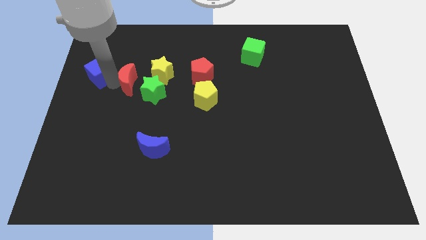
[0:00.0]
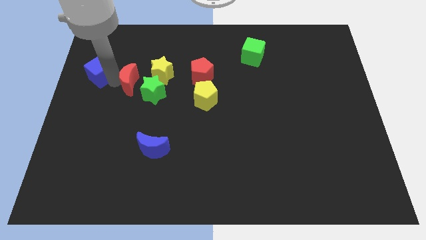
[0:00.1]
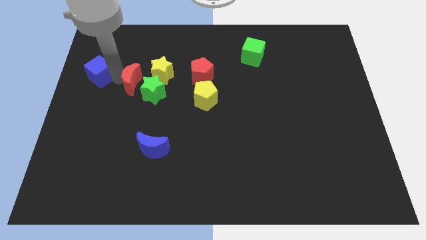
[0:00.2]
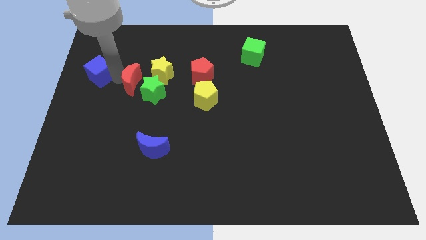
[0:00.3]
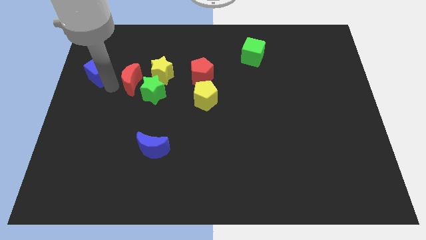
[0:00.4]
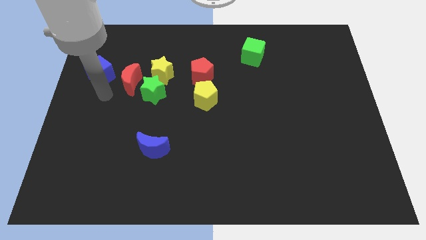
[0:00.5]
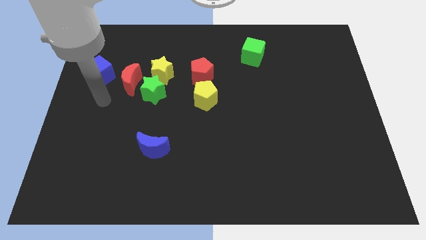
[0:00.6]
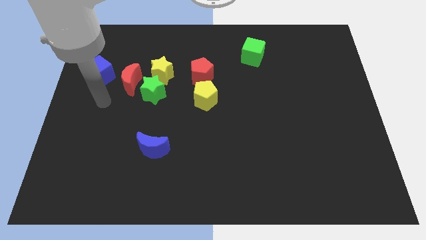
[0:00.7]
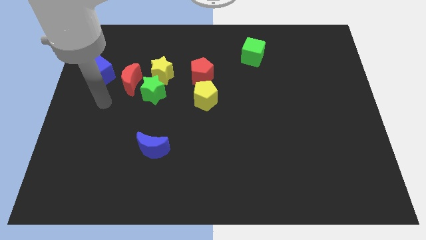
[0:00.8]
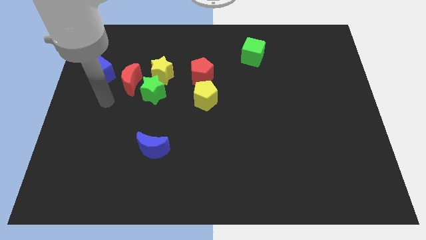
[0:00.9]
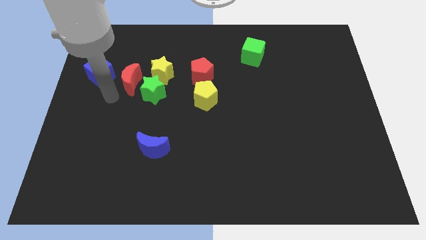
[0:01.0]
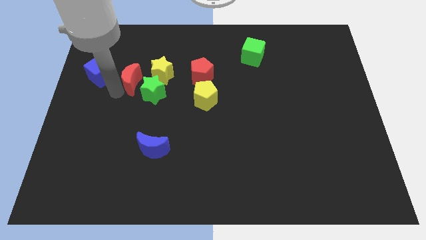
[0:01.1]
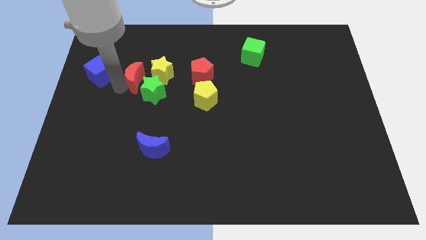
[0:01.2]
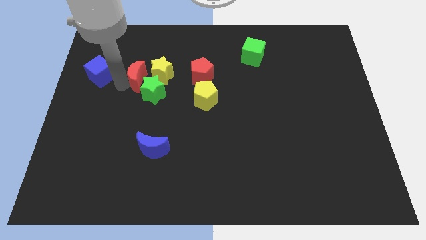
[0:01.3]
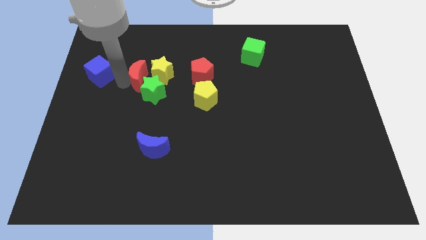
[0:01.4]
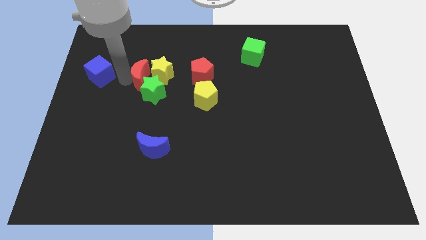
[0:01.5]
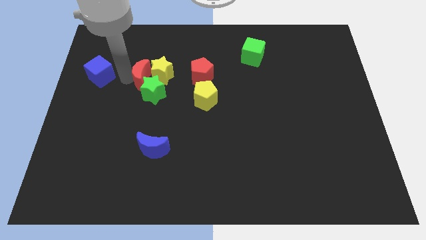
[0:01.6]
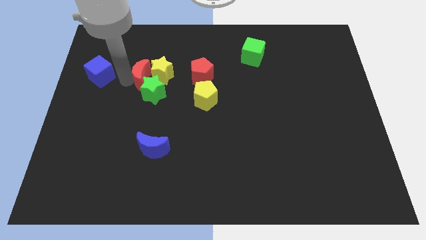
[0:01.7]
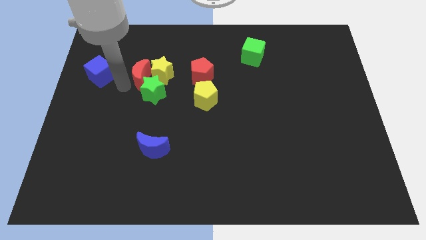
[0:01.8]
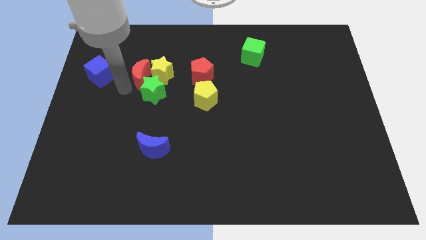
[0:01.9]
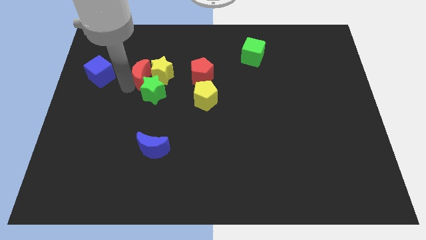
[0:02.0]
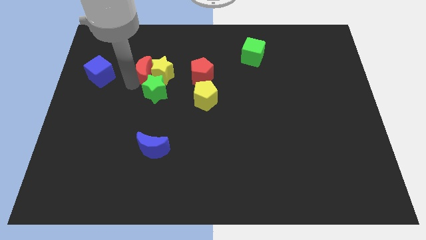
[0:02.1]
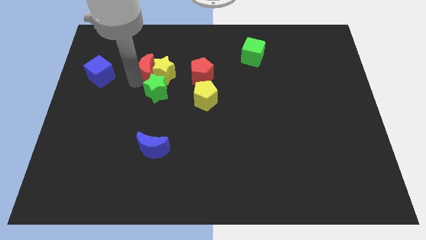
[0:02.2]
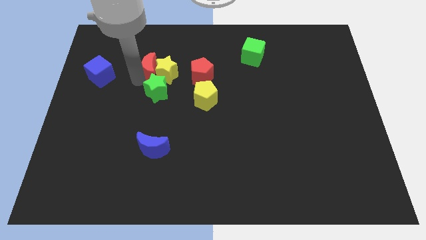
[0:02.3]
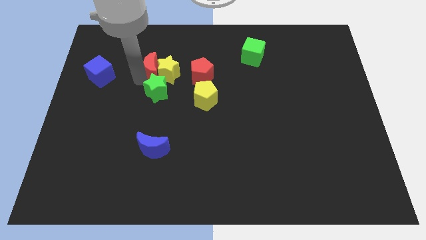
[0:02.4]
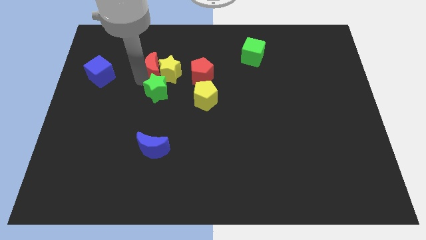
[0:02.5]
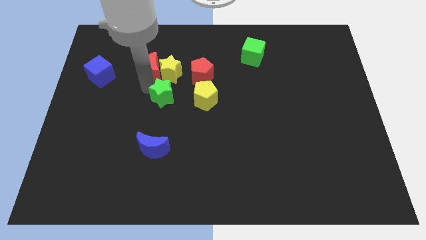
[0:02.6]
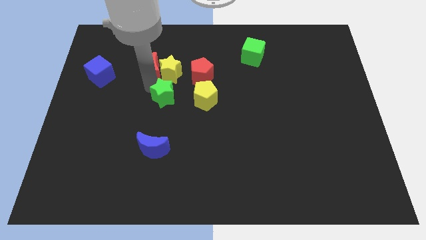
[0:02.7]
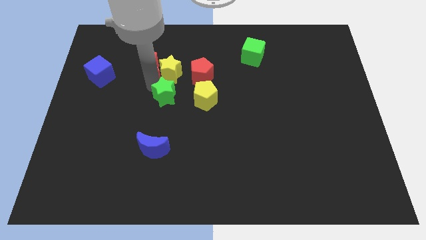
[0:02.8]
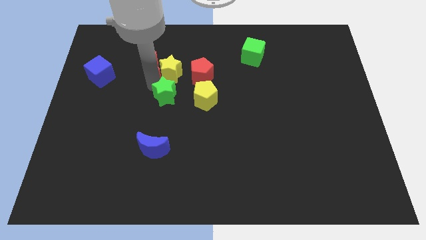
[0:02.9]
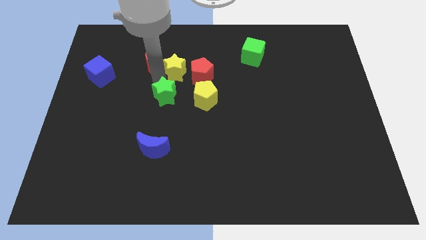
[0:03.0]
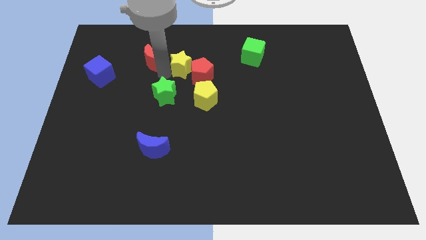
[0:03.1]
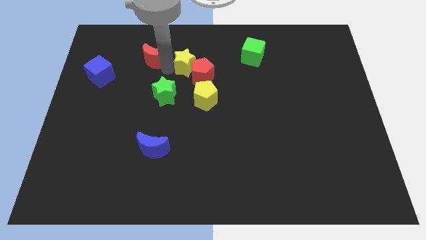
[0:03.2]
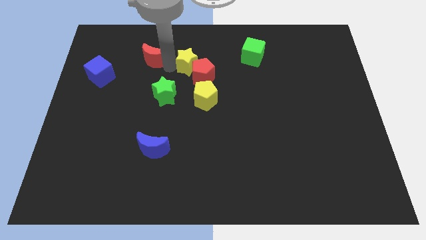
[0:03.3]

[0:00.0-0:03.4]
slightly move down the green star

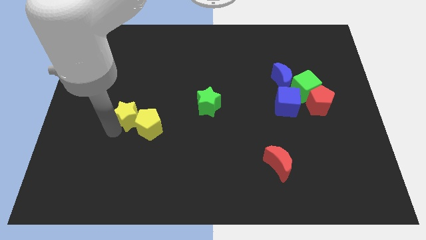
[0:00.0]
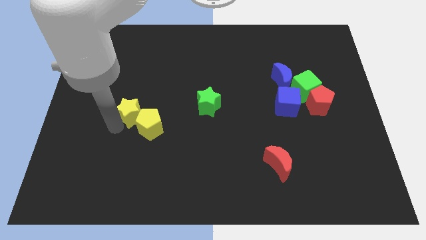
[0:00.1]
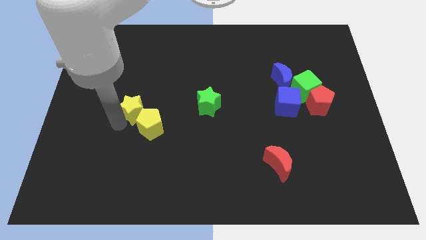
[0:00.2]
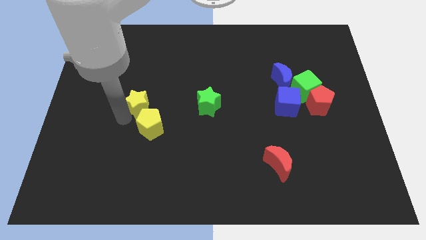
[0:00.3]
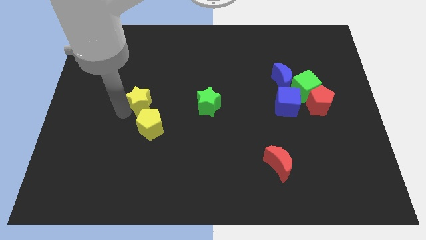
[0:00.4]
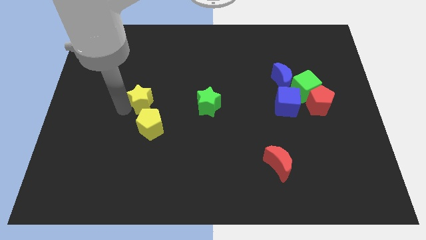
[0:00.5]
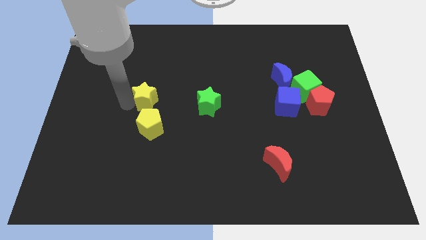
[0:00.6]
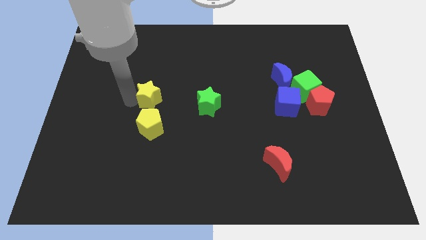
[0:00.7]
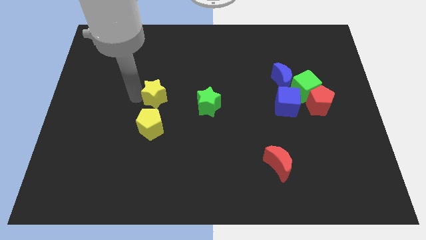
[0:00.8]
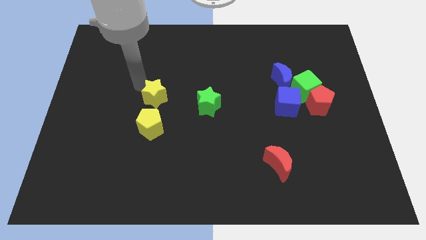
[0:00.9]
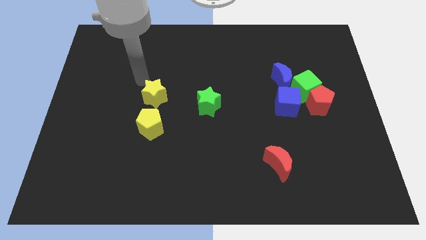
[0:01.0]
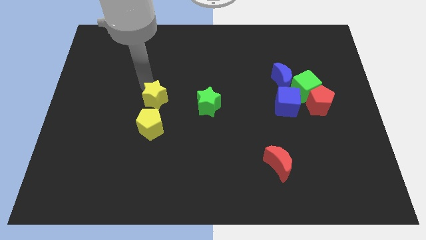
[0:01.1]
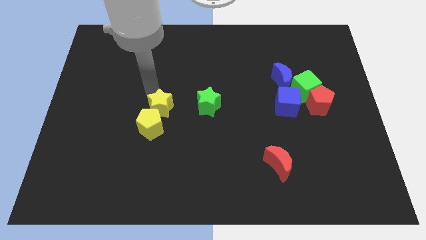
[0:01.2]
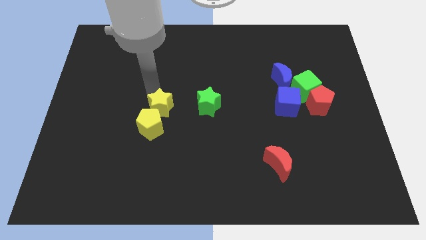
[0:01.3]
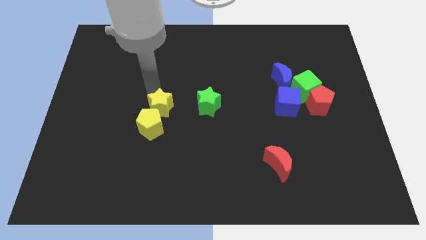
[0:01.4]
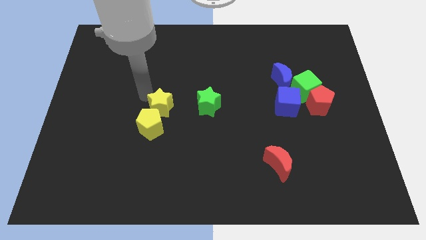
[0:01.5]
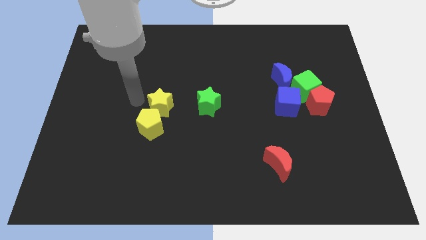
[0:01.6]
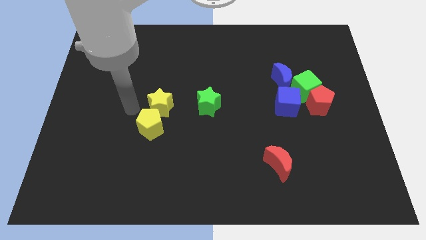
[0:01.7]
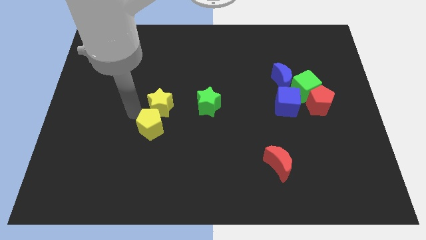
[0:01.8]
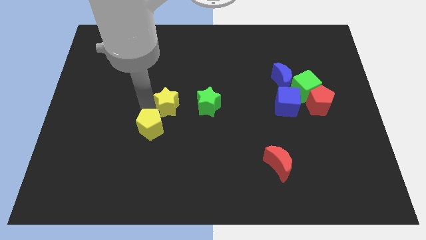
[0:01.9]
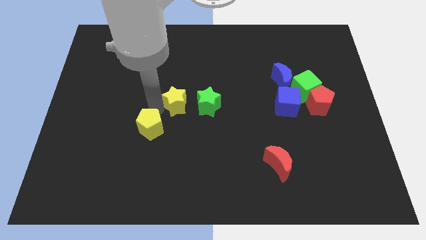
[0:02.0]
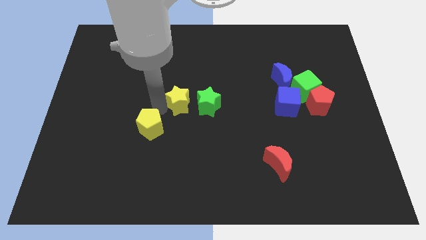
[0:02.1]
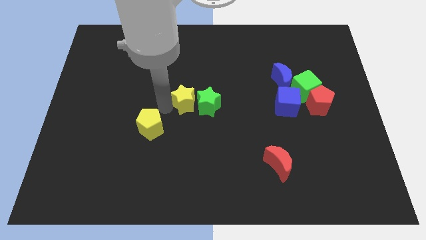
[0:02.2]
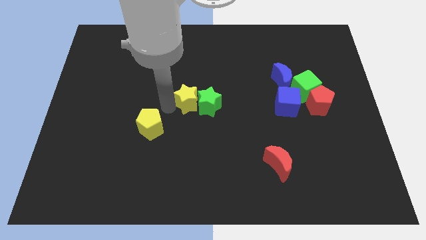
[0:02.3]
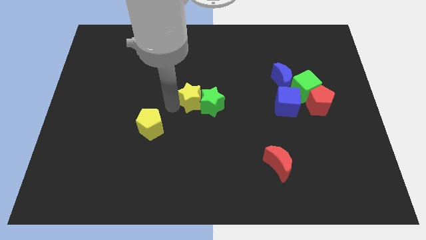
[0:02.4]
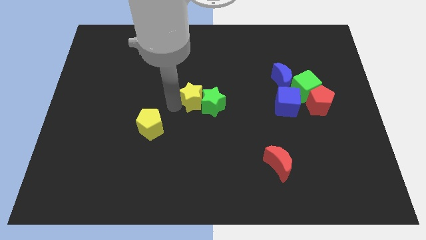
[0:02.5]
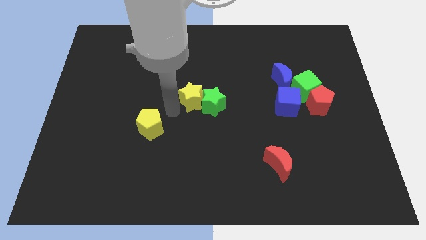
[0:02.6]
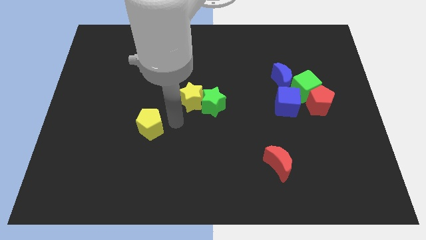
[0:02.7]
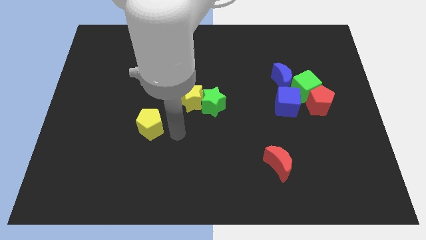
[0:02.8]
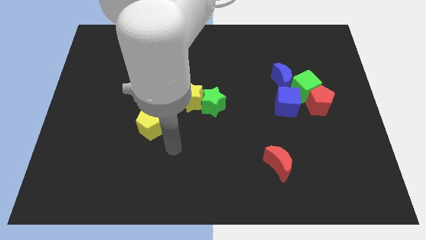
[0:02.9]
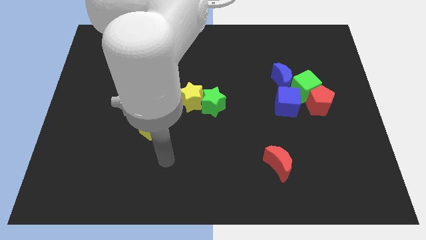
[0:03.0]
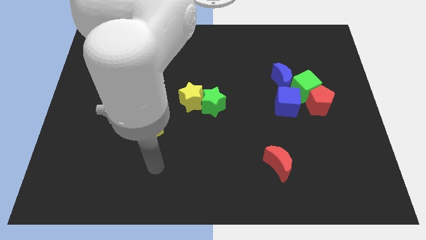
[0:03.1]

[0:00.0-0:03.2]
separate yellow star from yellow pentagon

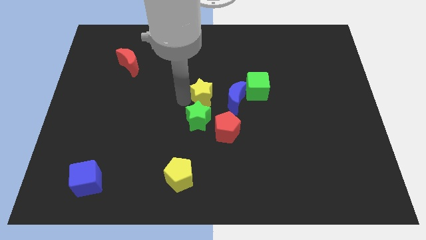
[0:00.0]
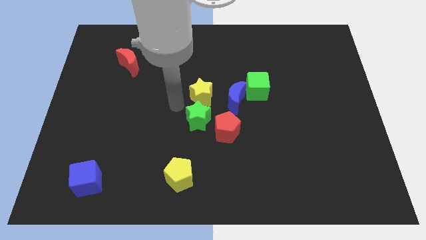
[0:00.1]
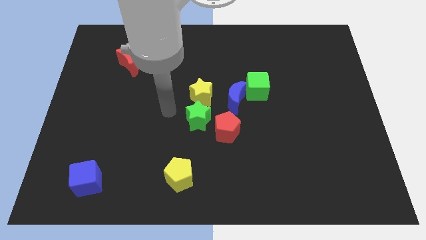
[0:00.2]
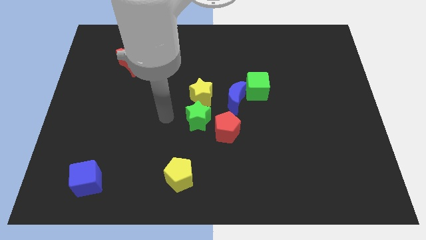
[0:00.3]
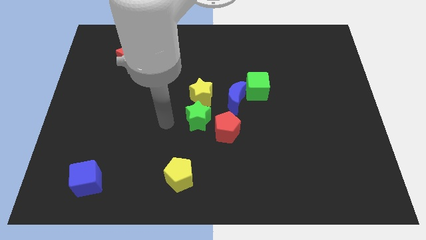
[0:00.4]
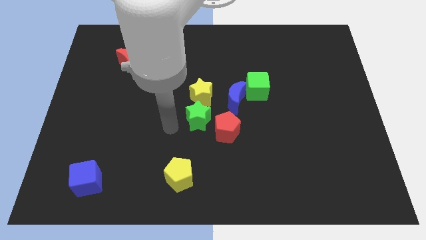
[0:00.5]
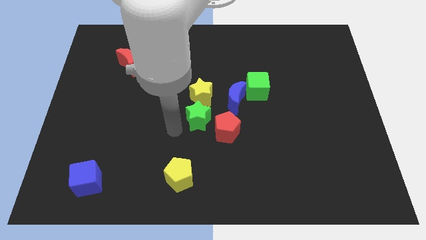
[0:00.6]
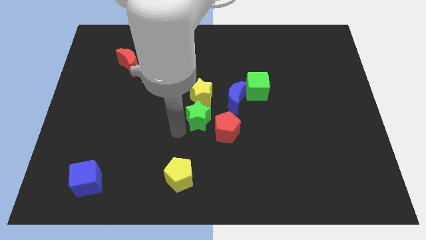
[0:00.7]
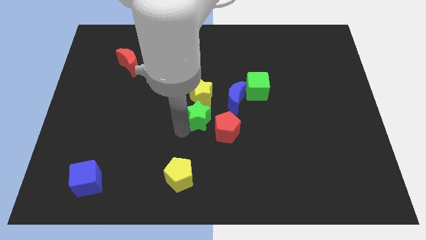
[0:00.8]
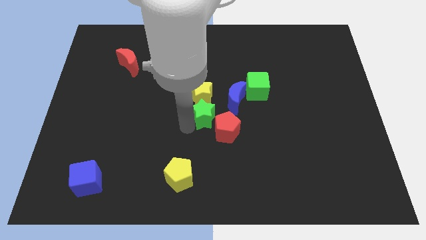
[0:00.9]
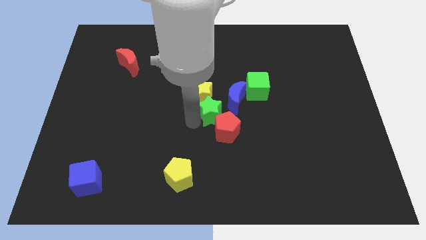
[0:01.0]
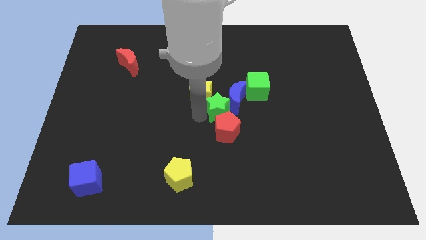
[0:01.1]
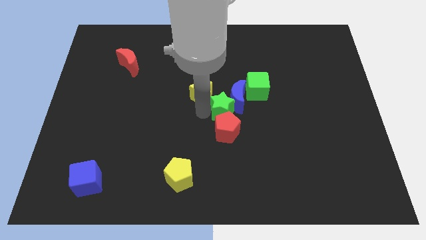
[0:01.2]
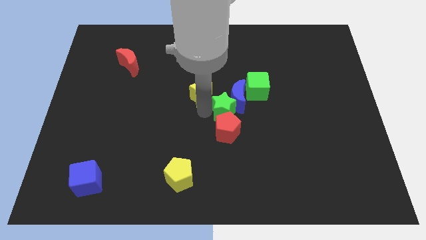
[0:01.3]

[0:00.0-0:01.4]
push the green star into the left side of the blue crescent

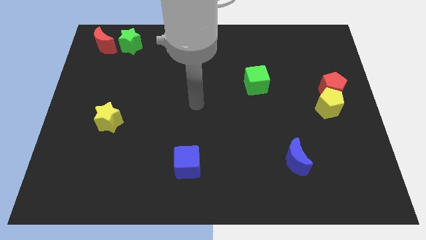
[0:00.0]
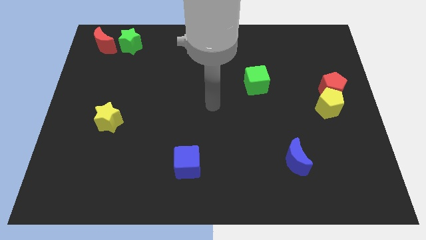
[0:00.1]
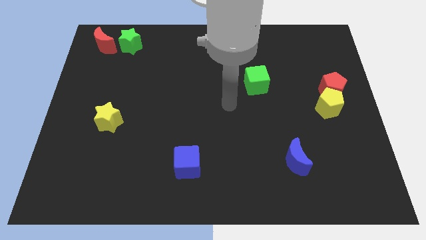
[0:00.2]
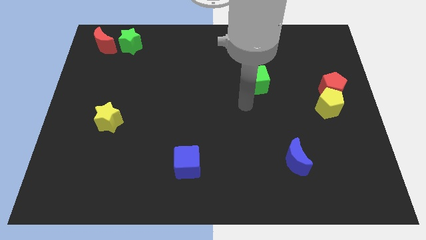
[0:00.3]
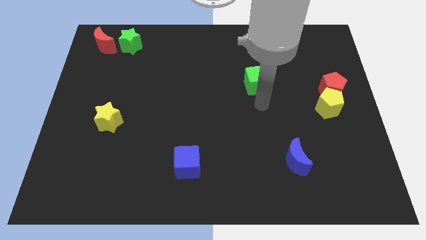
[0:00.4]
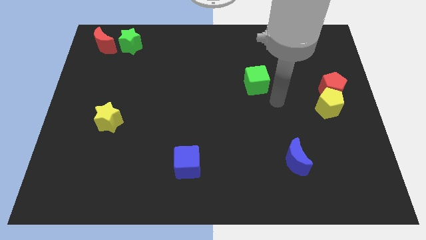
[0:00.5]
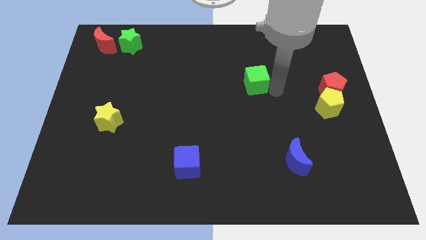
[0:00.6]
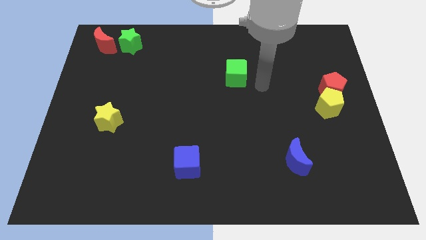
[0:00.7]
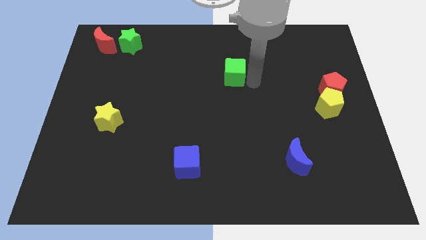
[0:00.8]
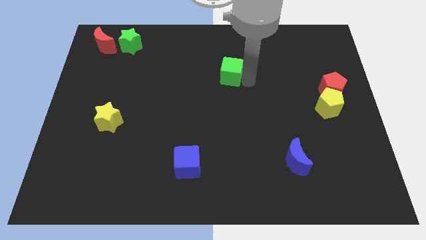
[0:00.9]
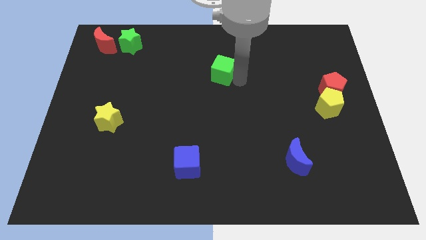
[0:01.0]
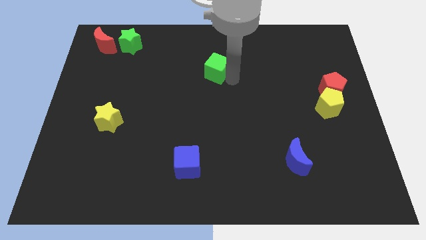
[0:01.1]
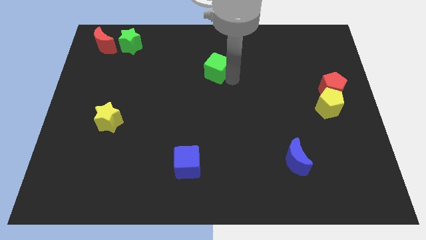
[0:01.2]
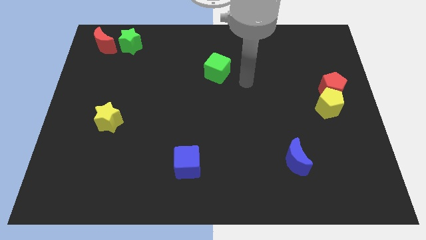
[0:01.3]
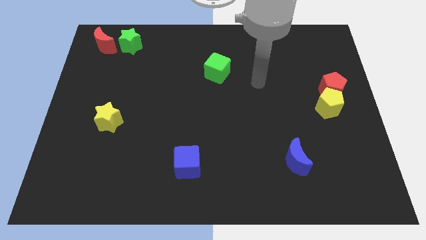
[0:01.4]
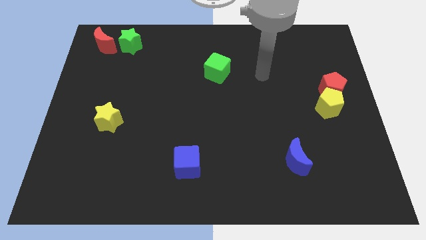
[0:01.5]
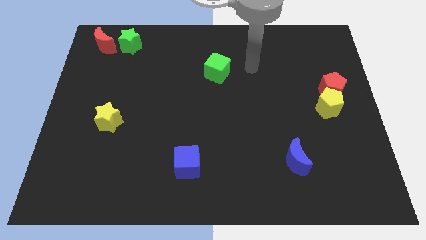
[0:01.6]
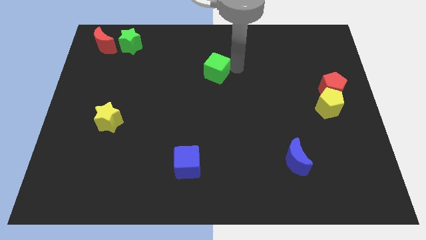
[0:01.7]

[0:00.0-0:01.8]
move the green cube to the center
